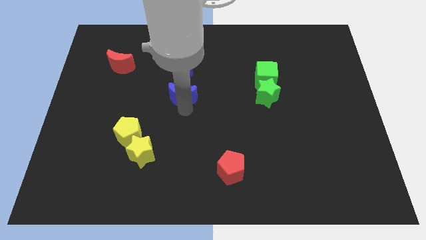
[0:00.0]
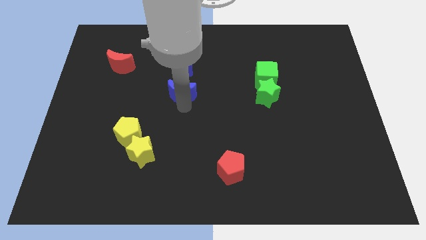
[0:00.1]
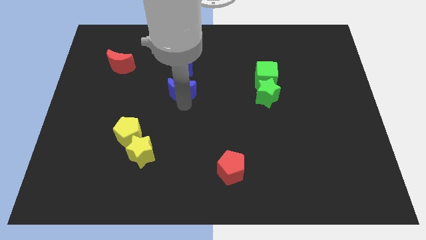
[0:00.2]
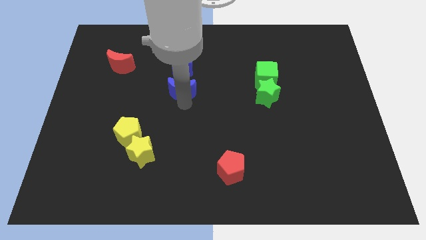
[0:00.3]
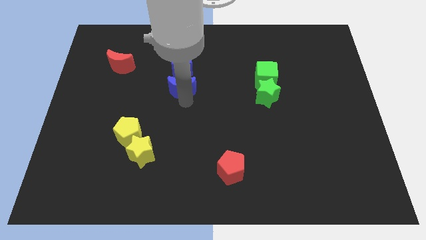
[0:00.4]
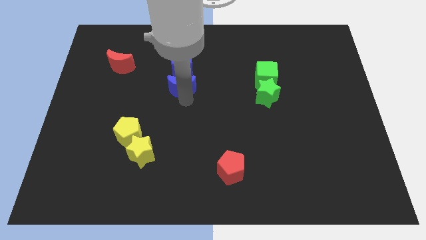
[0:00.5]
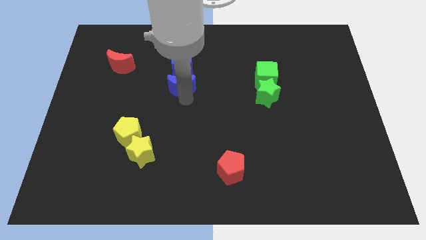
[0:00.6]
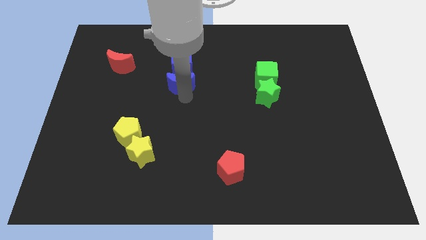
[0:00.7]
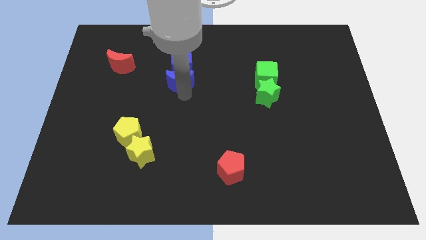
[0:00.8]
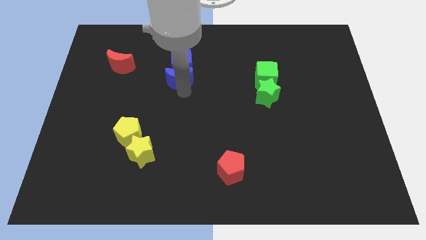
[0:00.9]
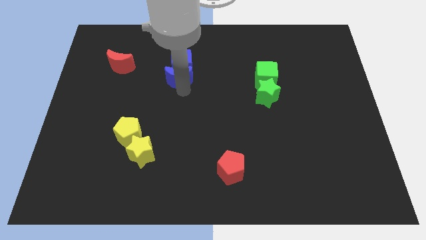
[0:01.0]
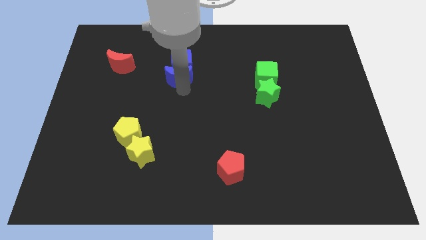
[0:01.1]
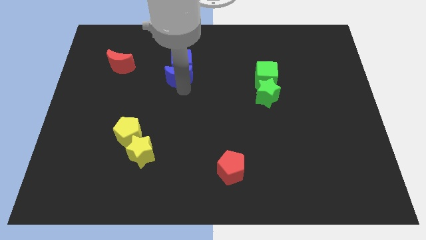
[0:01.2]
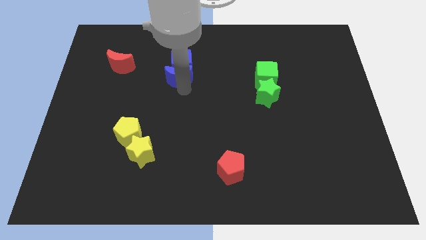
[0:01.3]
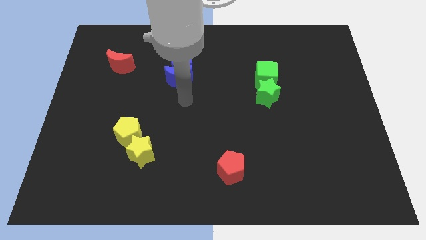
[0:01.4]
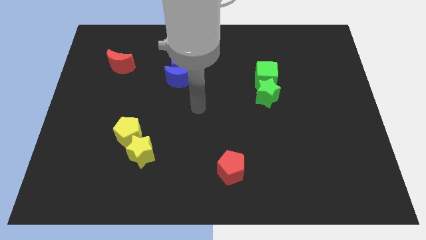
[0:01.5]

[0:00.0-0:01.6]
push the blue moon into the blue cube

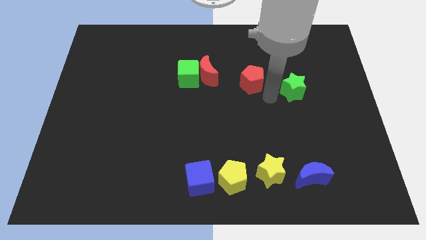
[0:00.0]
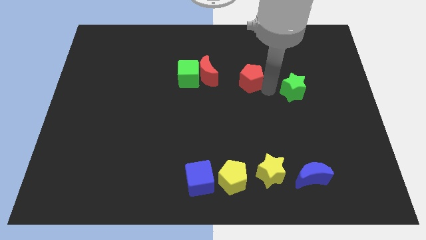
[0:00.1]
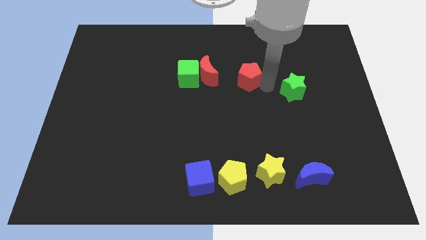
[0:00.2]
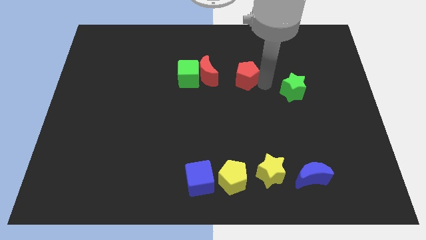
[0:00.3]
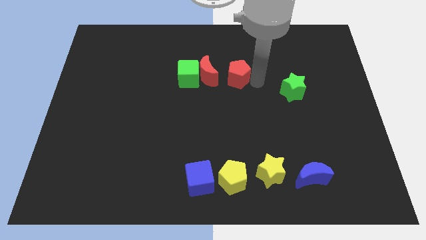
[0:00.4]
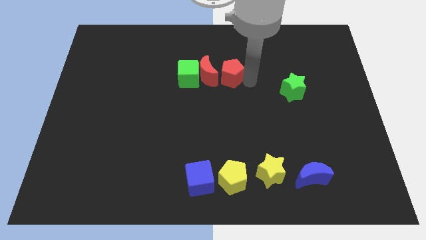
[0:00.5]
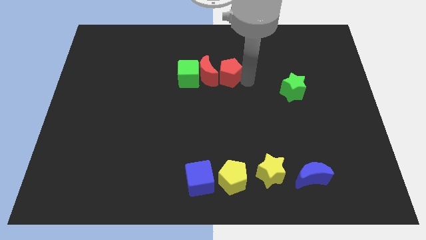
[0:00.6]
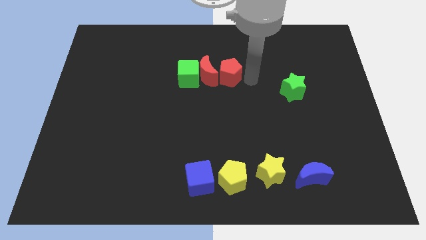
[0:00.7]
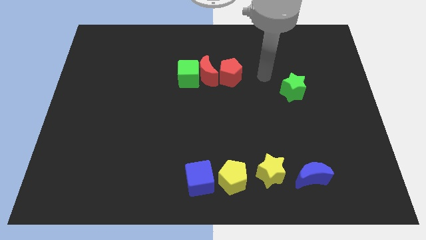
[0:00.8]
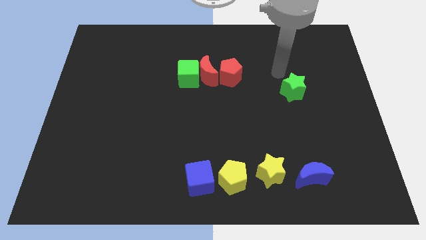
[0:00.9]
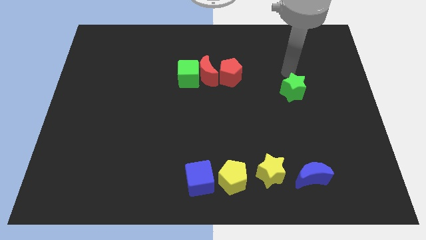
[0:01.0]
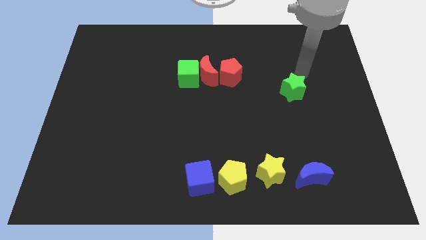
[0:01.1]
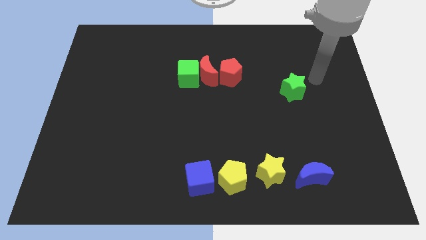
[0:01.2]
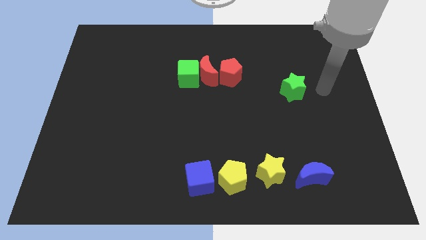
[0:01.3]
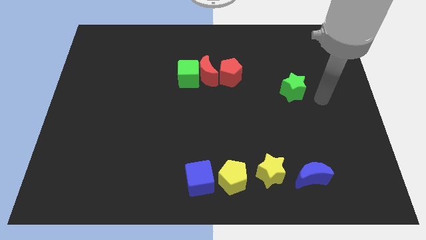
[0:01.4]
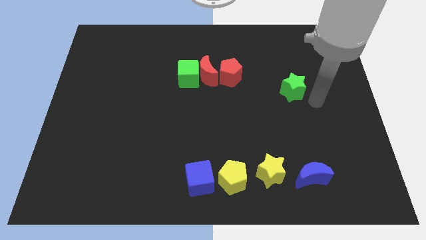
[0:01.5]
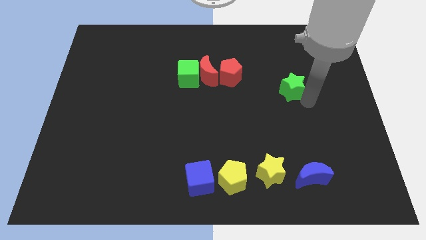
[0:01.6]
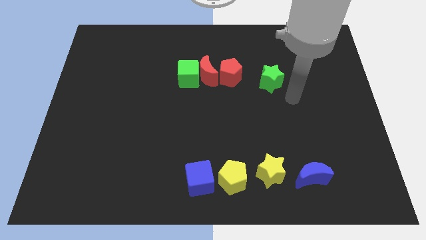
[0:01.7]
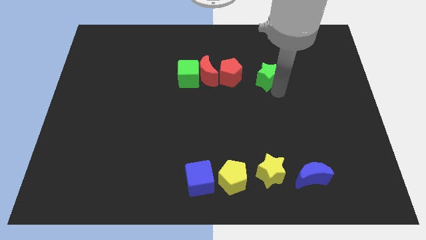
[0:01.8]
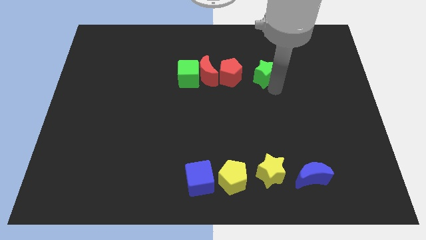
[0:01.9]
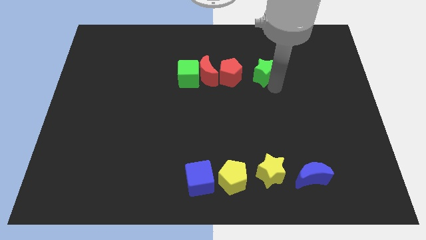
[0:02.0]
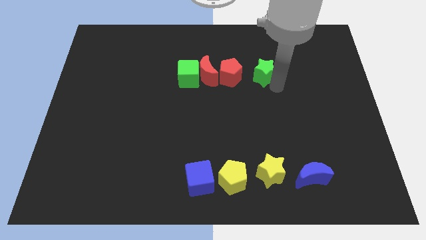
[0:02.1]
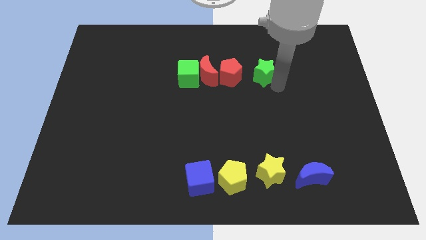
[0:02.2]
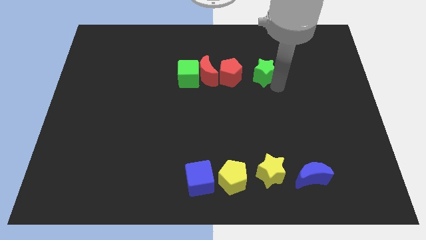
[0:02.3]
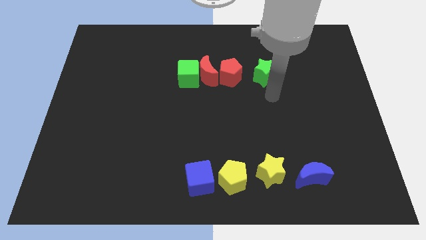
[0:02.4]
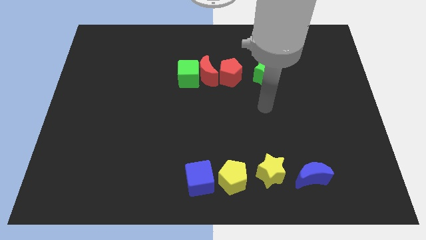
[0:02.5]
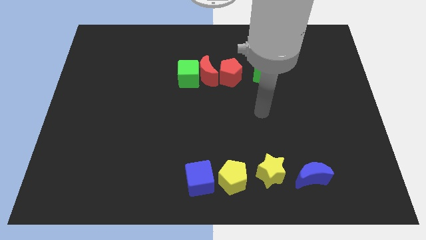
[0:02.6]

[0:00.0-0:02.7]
push the red pentagon along with green star right to the green cube

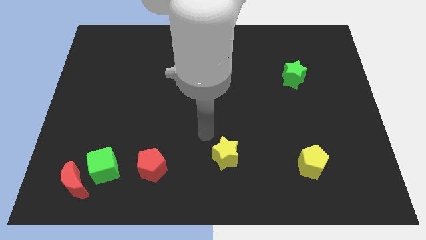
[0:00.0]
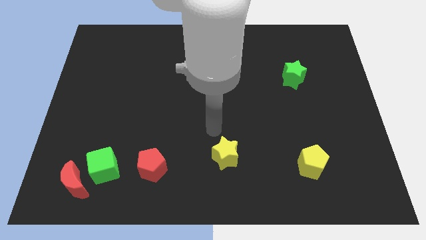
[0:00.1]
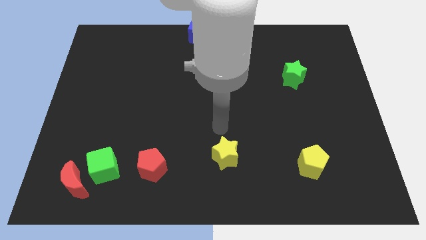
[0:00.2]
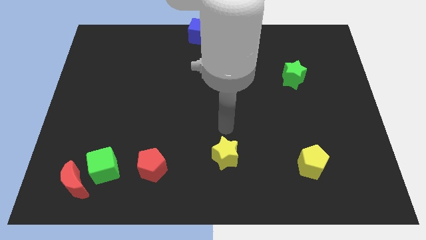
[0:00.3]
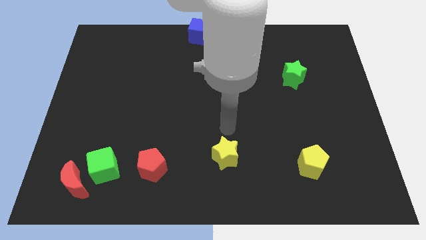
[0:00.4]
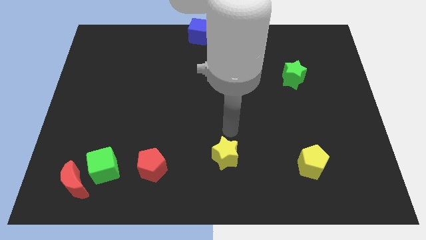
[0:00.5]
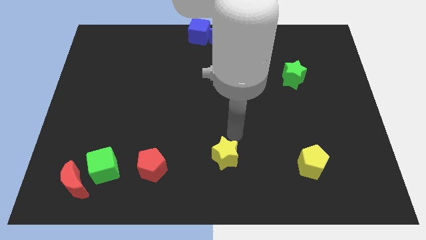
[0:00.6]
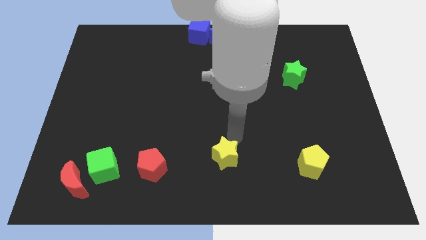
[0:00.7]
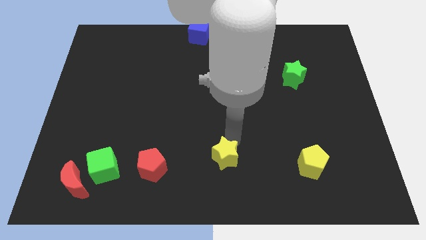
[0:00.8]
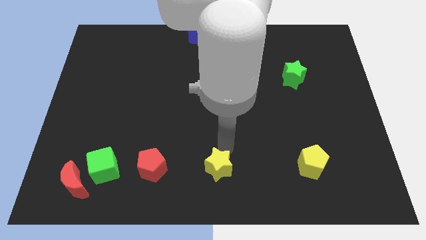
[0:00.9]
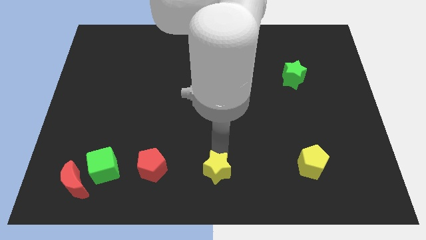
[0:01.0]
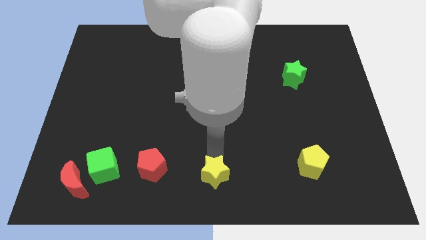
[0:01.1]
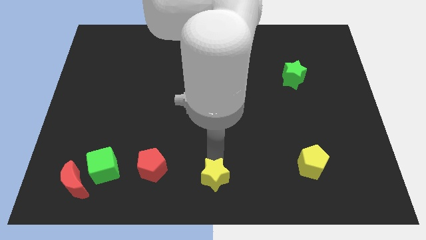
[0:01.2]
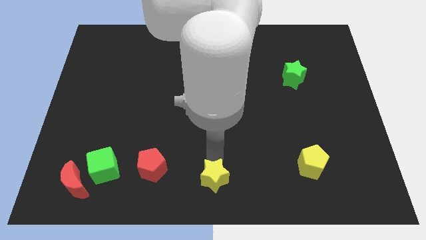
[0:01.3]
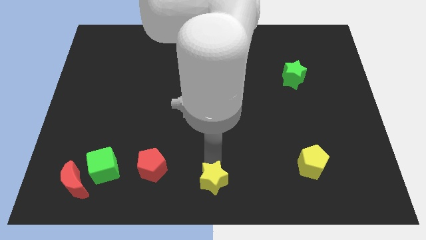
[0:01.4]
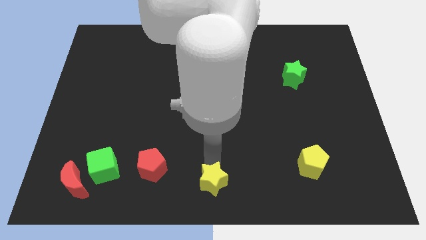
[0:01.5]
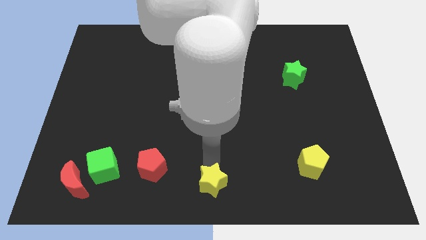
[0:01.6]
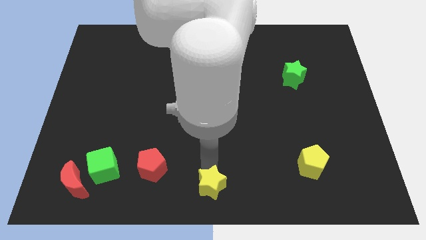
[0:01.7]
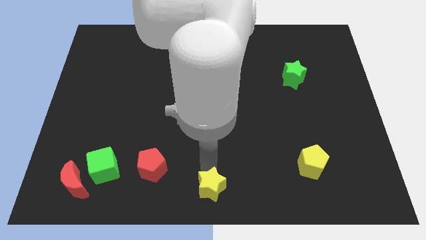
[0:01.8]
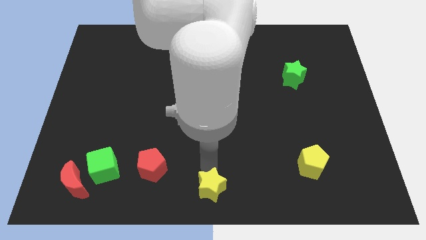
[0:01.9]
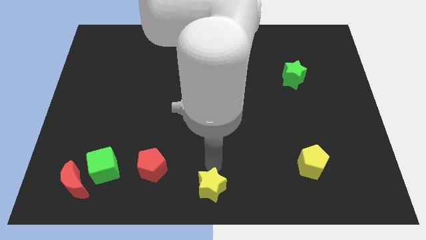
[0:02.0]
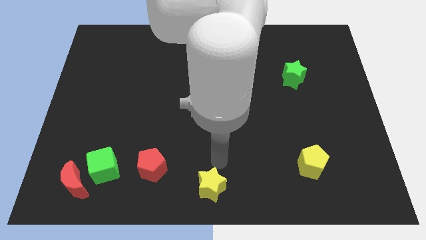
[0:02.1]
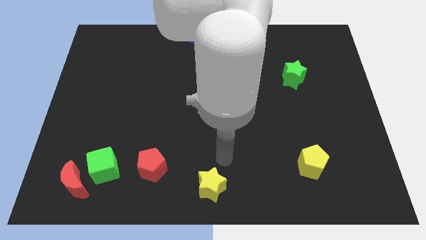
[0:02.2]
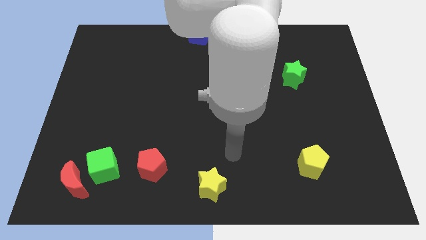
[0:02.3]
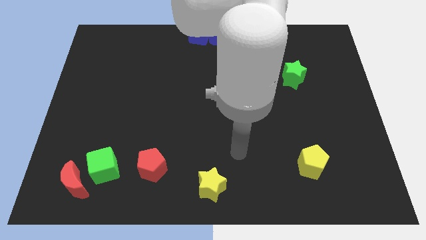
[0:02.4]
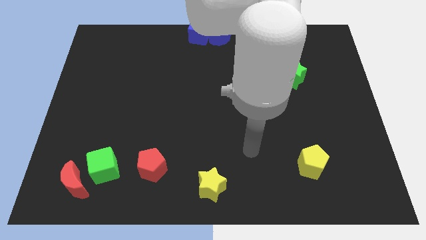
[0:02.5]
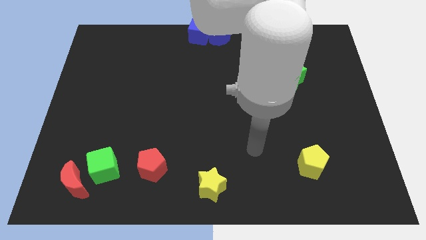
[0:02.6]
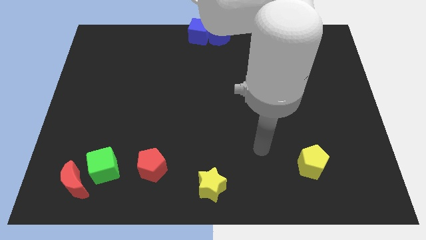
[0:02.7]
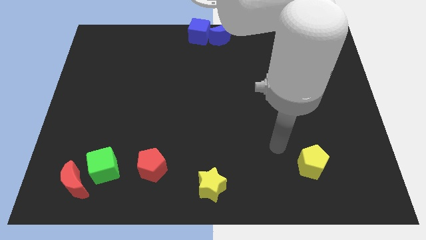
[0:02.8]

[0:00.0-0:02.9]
push the yellow star to the bottom middle of the board

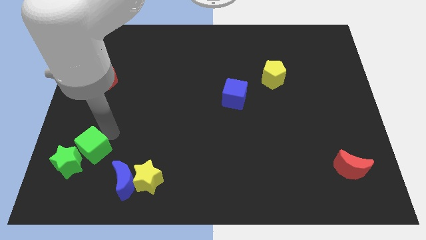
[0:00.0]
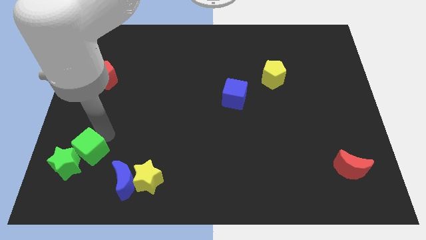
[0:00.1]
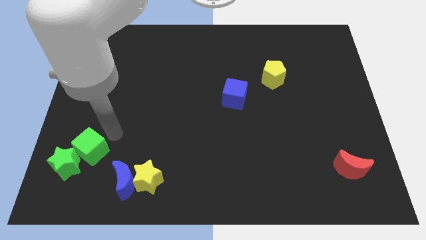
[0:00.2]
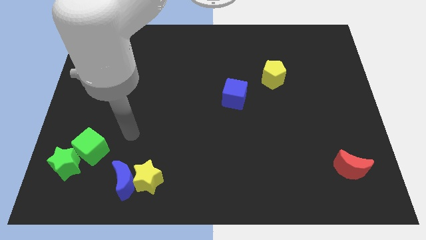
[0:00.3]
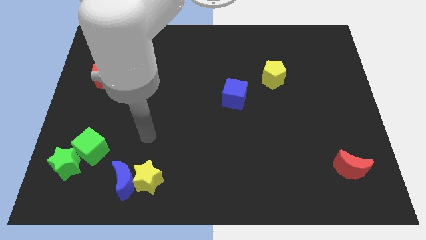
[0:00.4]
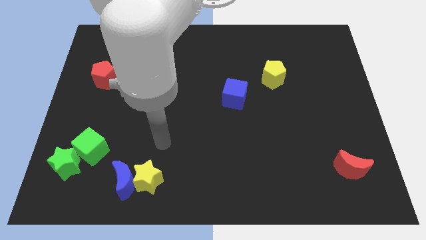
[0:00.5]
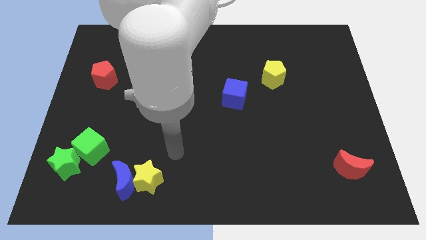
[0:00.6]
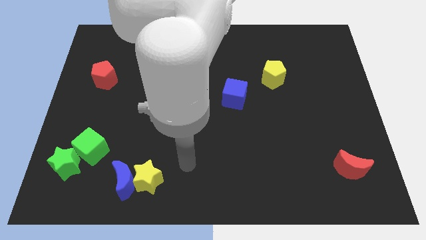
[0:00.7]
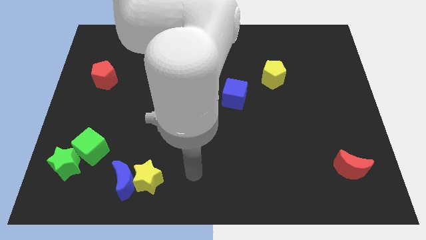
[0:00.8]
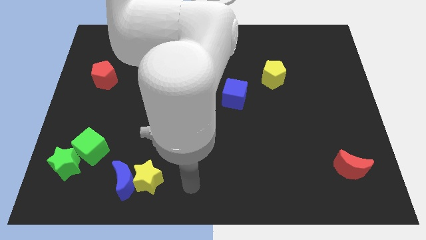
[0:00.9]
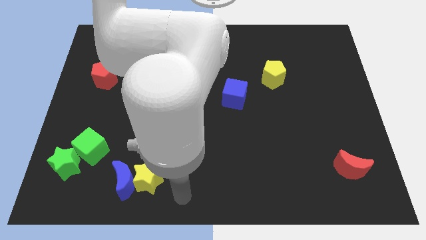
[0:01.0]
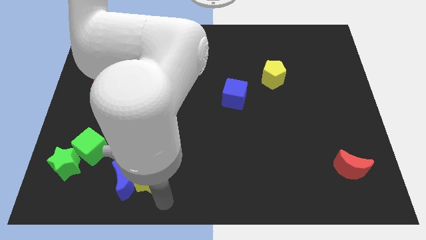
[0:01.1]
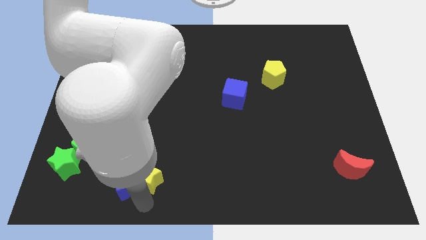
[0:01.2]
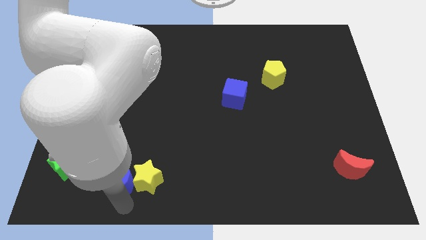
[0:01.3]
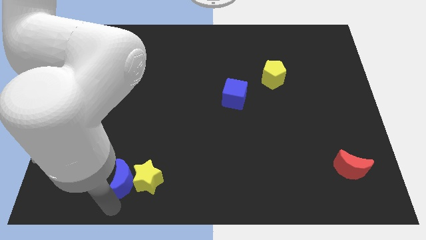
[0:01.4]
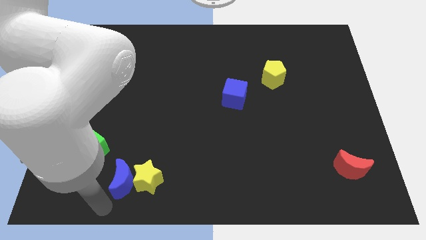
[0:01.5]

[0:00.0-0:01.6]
place the arm below the blue crescent

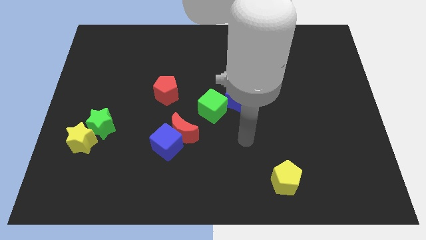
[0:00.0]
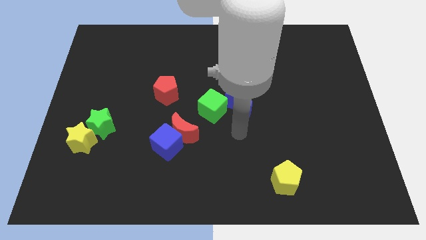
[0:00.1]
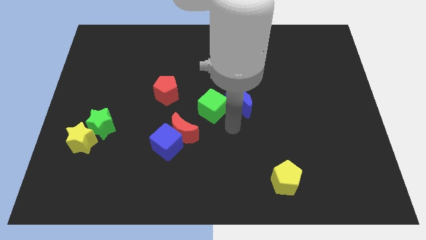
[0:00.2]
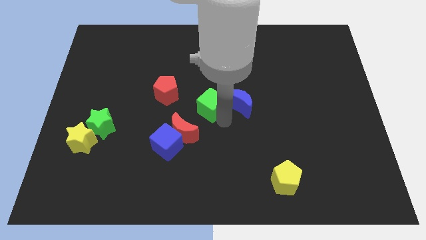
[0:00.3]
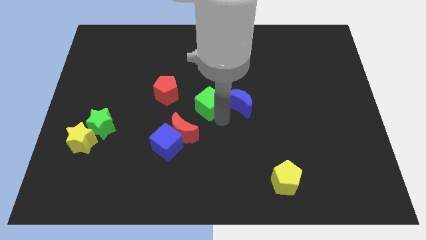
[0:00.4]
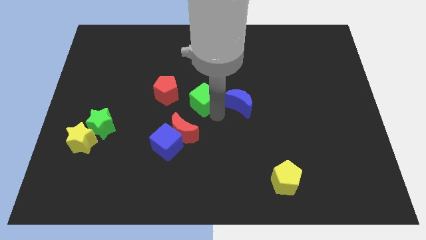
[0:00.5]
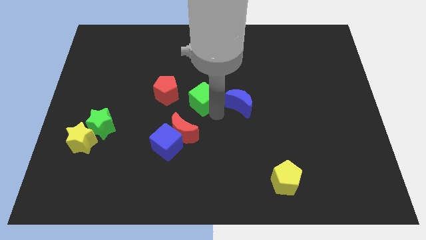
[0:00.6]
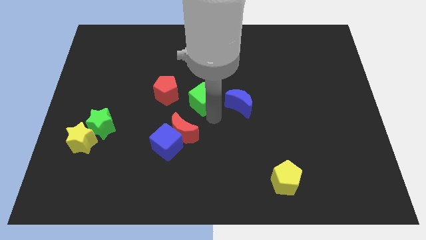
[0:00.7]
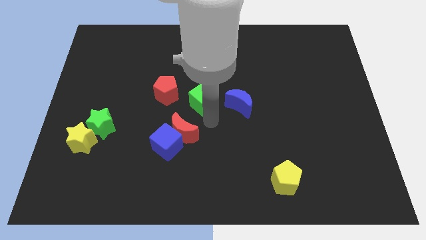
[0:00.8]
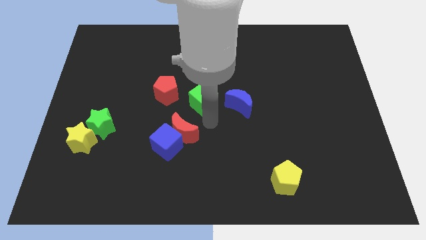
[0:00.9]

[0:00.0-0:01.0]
move the green cube between red pentagon and blue moon
